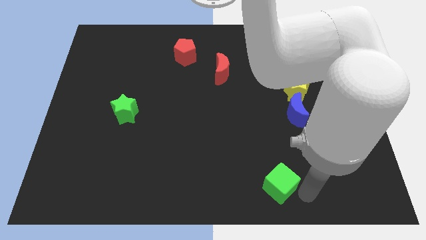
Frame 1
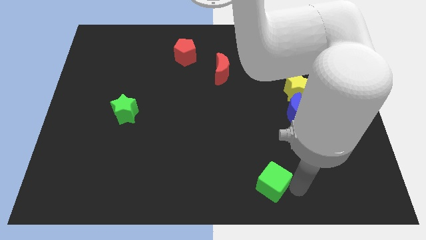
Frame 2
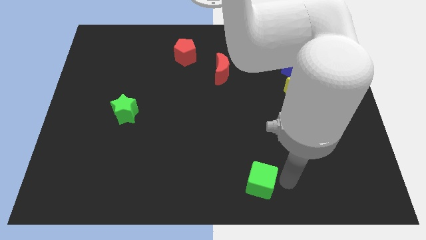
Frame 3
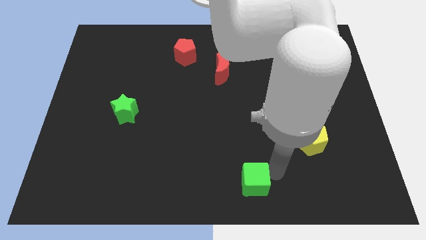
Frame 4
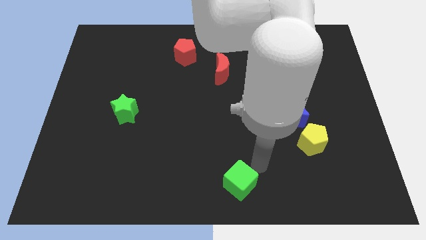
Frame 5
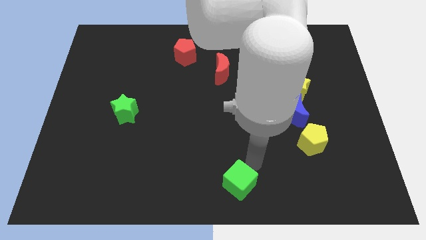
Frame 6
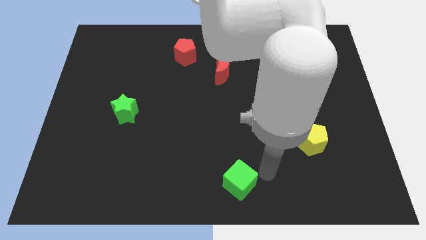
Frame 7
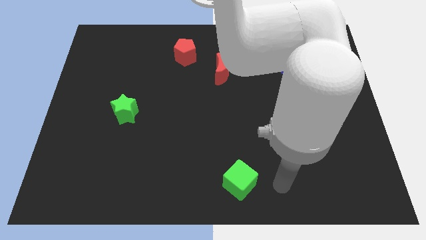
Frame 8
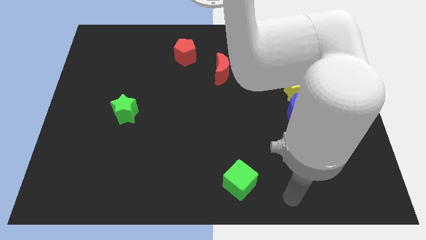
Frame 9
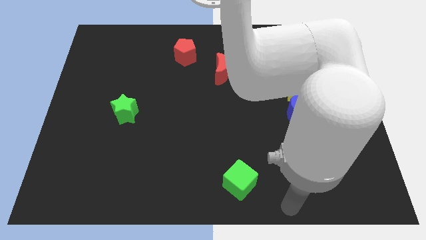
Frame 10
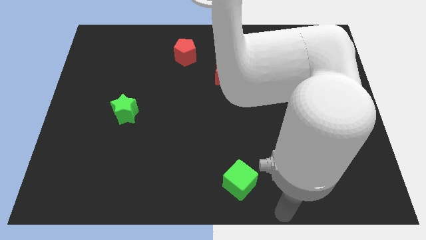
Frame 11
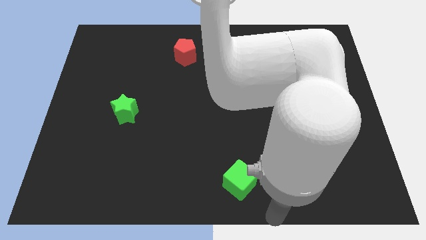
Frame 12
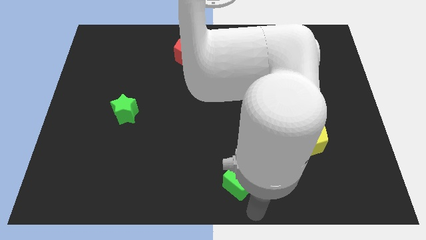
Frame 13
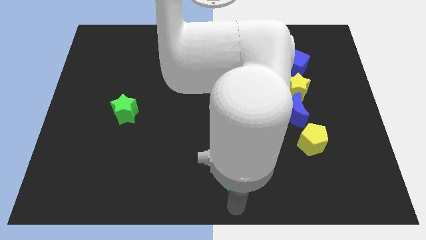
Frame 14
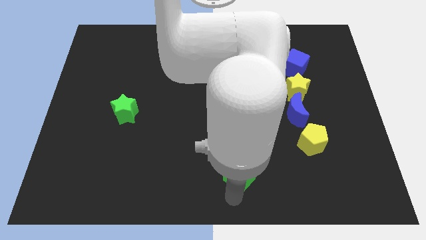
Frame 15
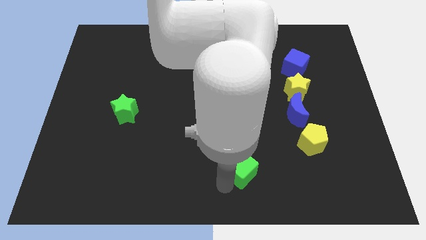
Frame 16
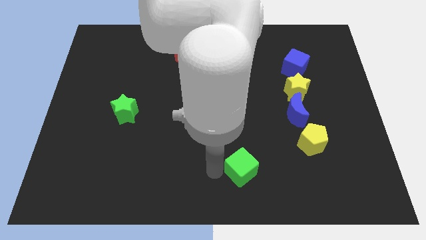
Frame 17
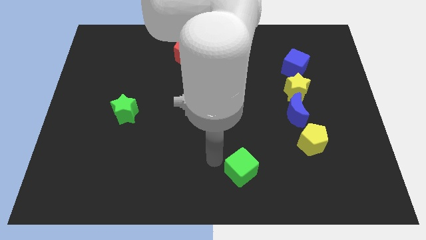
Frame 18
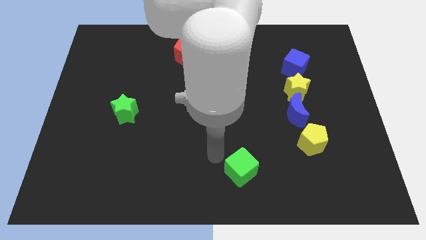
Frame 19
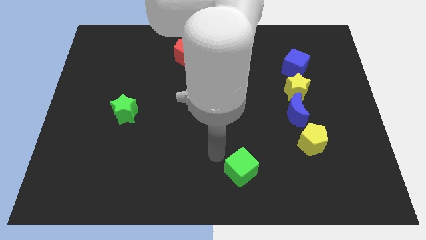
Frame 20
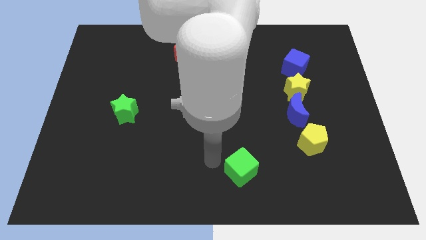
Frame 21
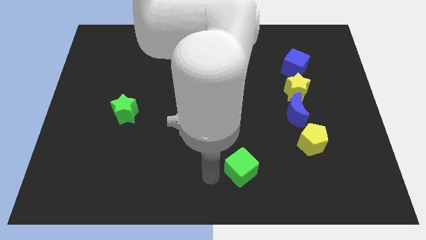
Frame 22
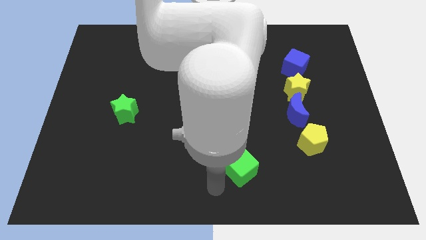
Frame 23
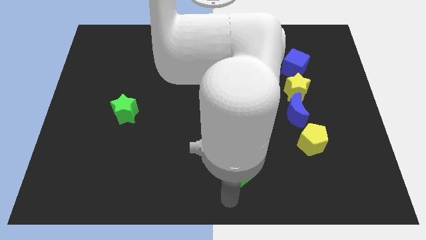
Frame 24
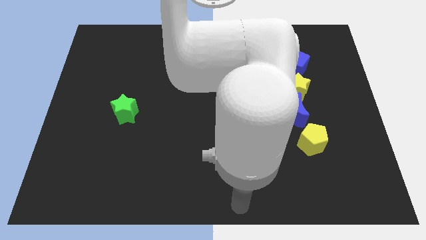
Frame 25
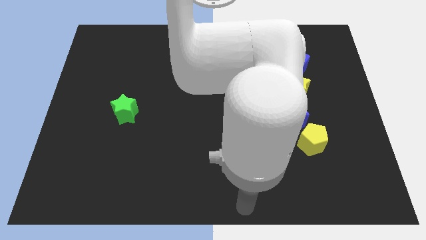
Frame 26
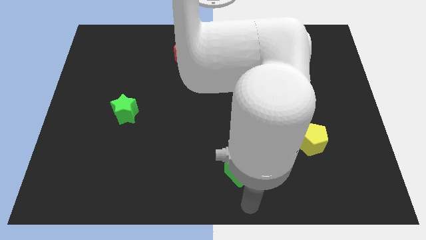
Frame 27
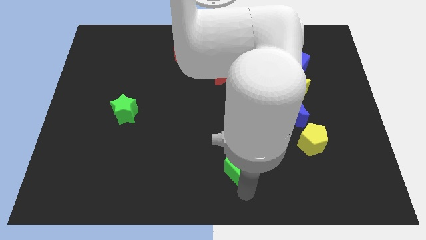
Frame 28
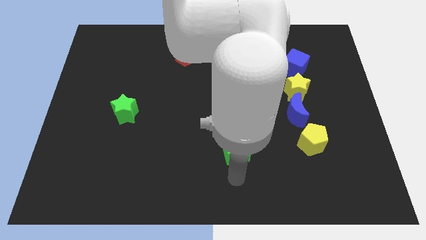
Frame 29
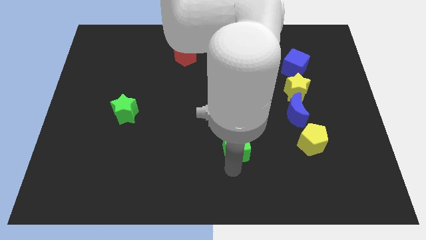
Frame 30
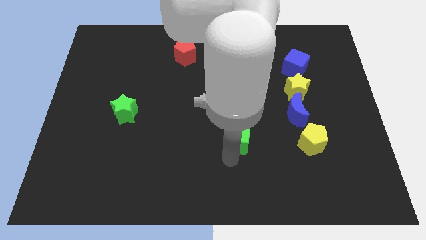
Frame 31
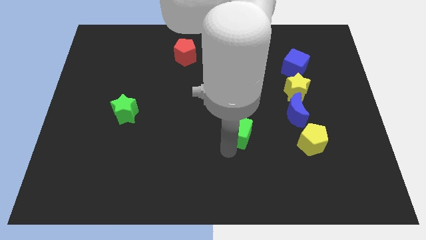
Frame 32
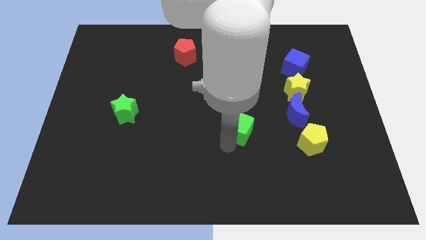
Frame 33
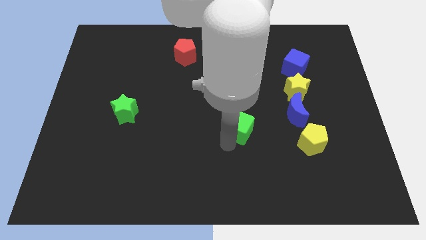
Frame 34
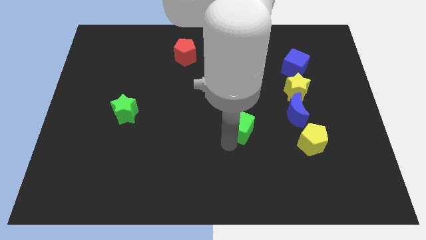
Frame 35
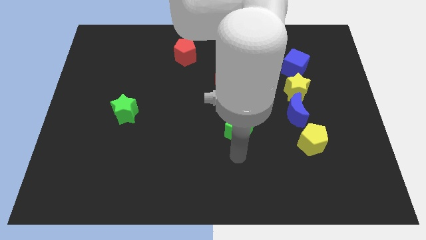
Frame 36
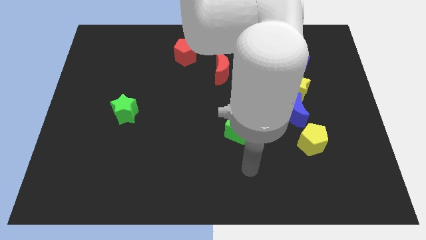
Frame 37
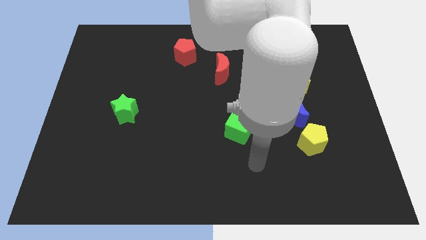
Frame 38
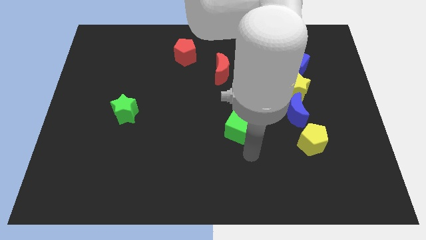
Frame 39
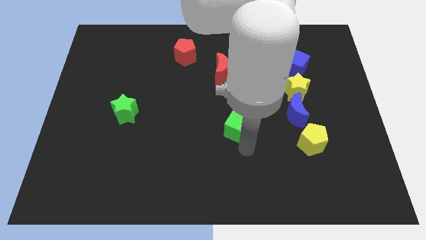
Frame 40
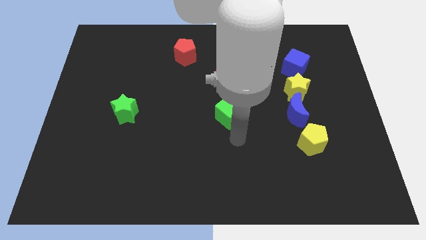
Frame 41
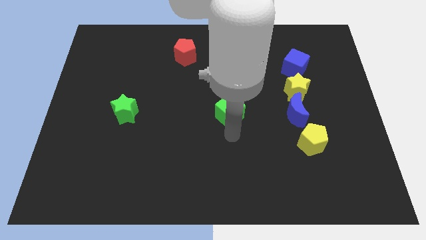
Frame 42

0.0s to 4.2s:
place green cube to the center of board

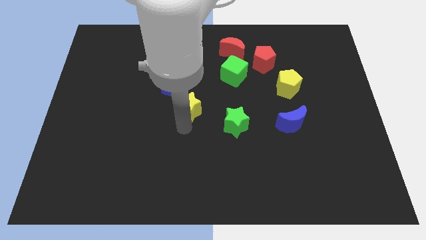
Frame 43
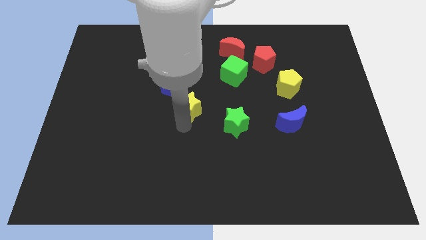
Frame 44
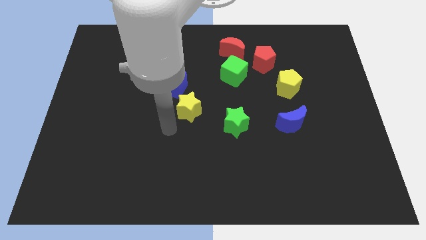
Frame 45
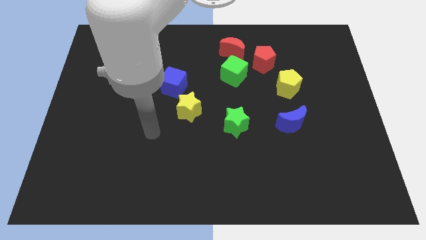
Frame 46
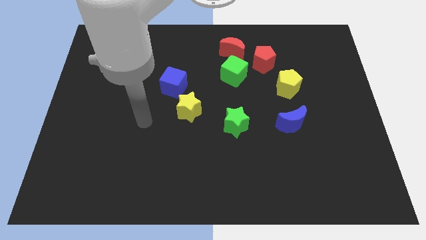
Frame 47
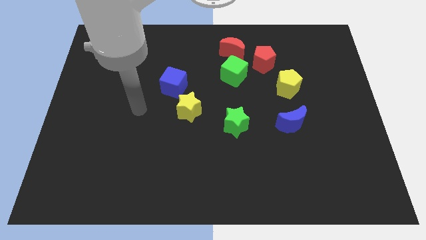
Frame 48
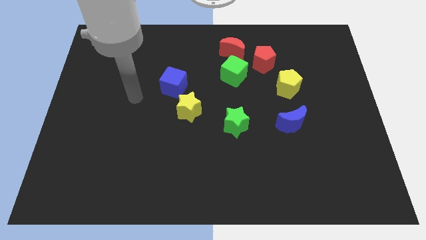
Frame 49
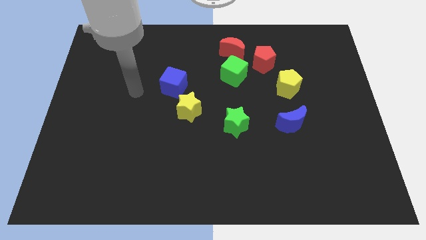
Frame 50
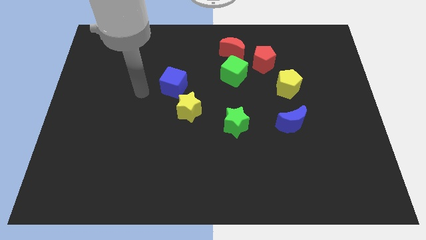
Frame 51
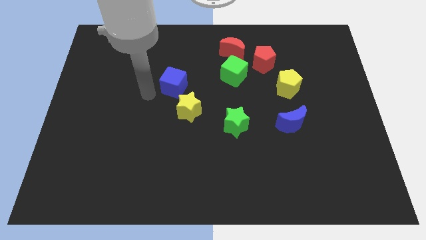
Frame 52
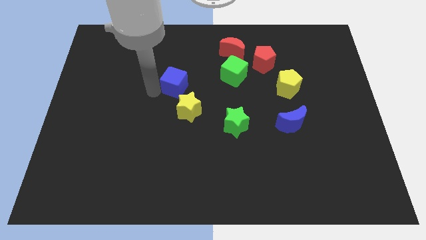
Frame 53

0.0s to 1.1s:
point your arm at the left of the blue cube

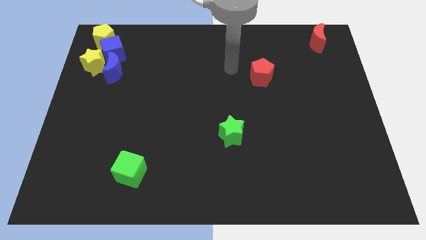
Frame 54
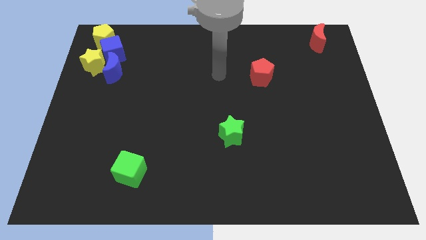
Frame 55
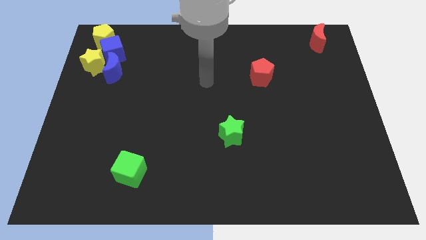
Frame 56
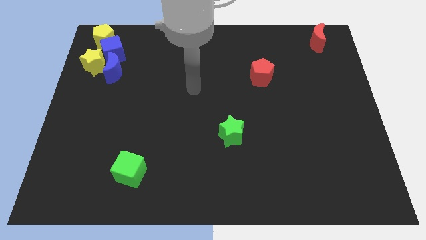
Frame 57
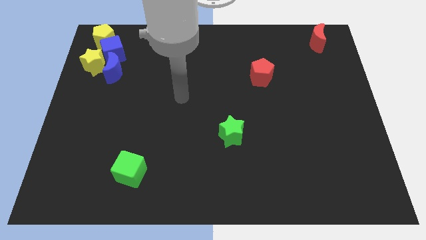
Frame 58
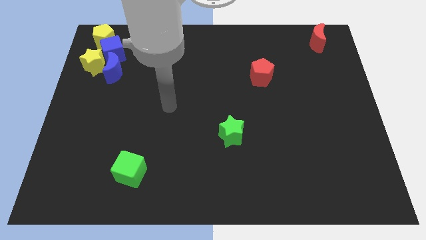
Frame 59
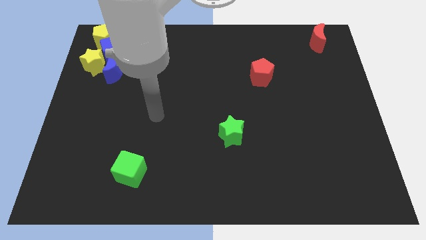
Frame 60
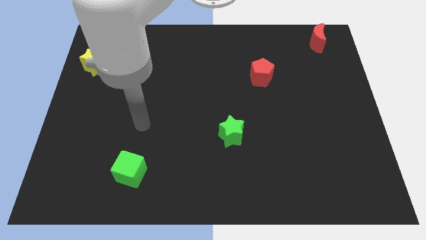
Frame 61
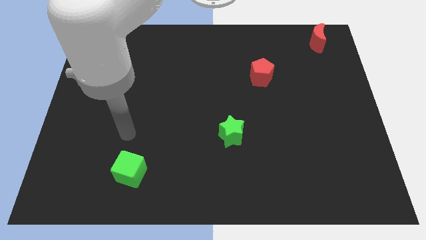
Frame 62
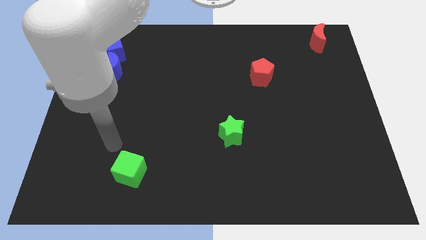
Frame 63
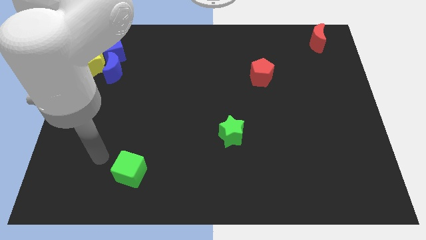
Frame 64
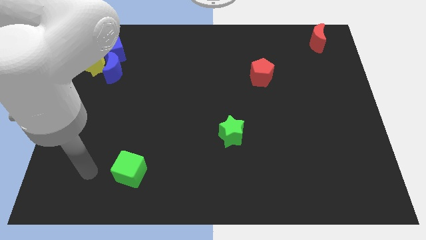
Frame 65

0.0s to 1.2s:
move the arm diagonally down

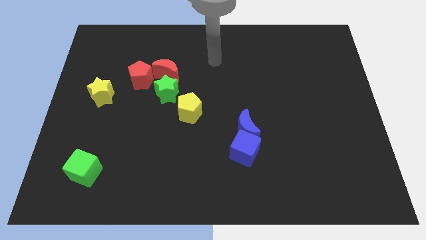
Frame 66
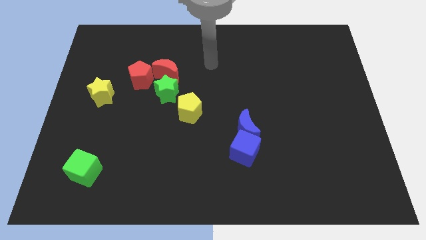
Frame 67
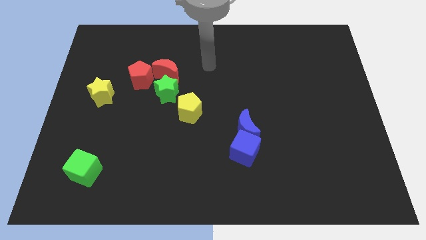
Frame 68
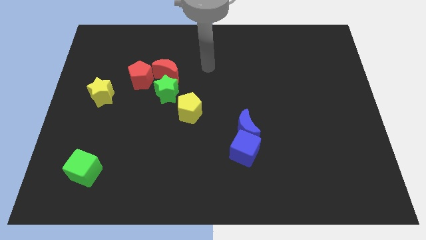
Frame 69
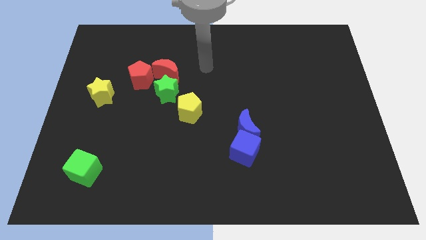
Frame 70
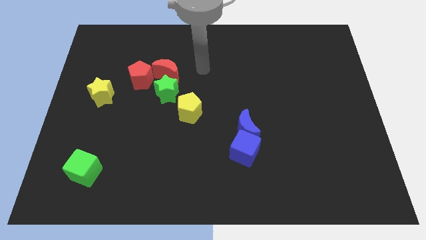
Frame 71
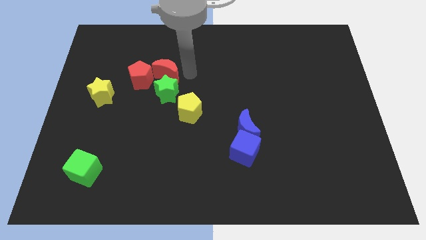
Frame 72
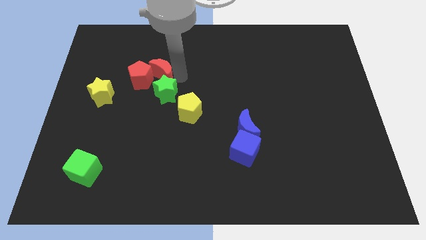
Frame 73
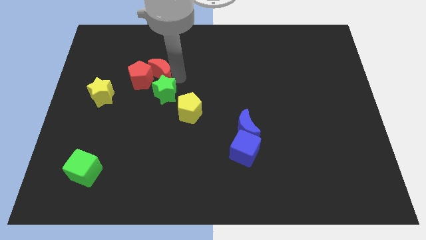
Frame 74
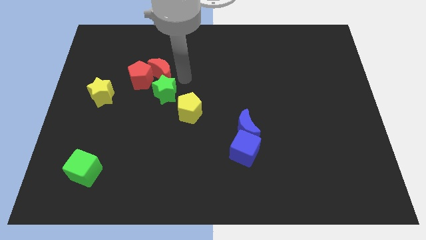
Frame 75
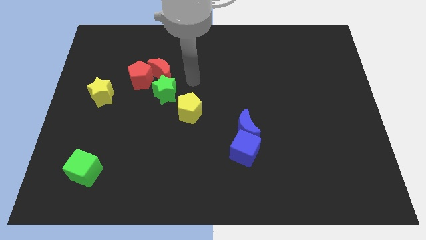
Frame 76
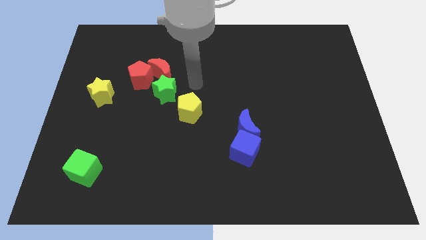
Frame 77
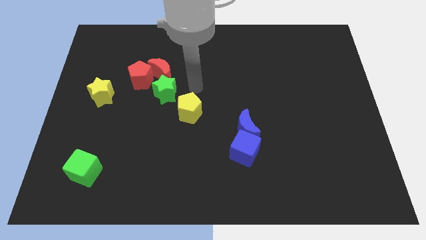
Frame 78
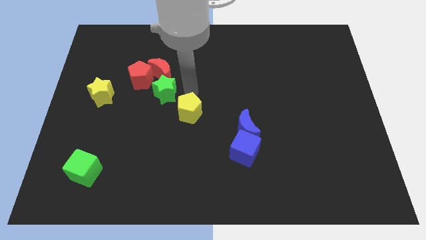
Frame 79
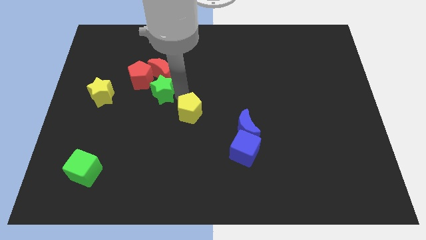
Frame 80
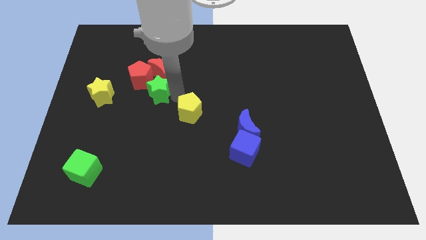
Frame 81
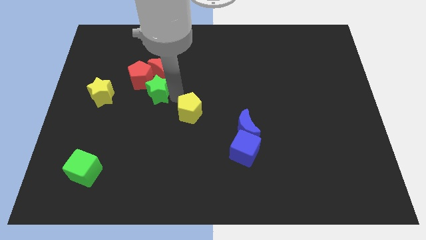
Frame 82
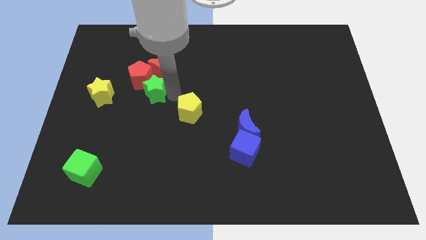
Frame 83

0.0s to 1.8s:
slightly push the green star towards the yellow star

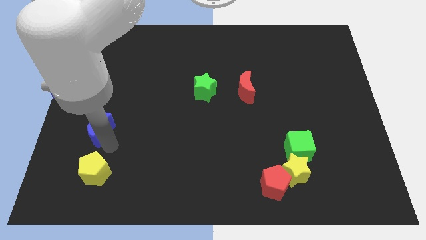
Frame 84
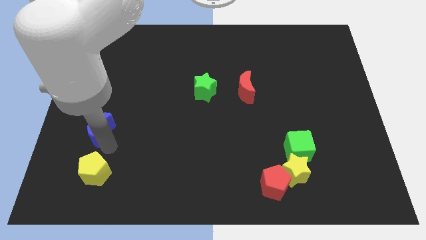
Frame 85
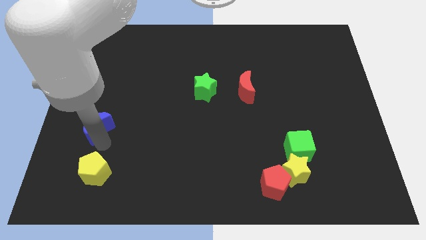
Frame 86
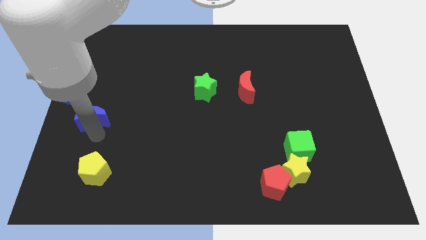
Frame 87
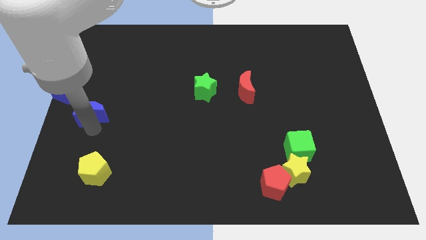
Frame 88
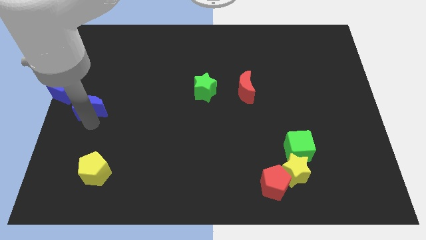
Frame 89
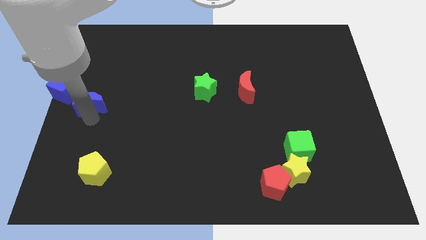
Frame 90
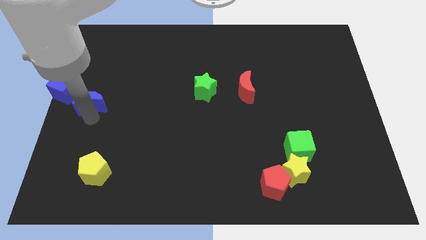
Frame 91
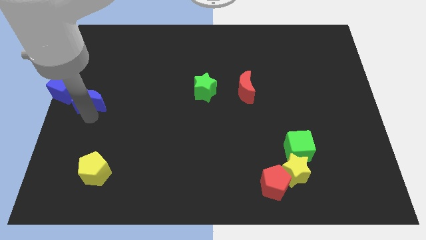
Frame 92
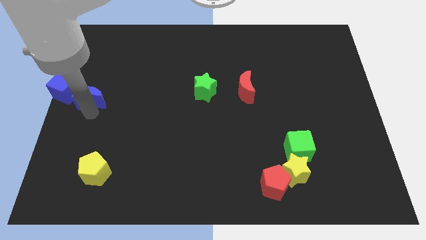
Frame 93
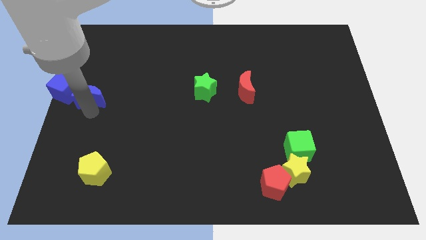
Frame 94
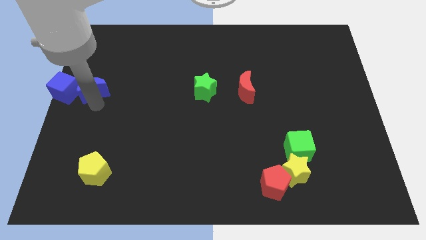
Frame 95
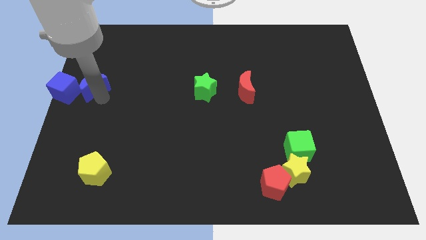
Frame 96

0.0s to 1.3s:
place blue moon on right side of blue cube
